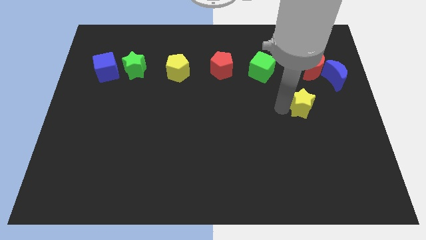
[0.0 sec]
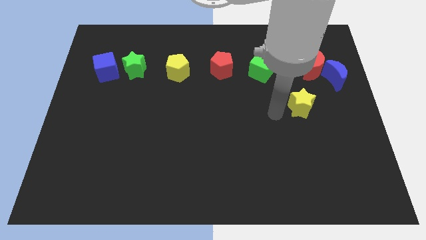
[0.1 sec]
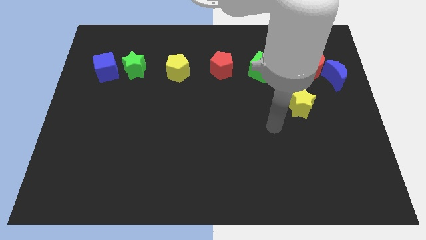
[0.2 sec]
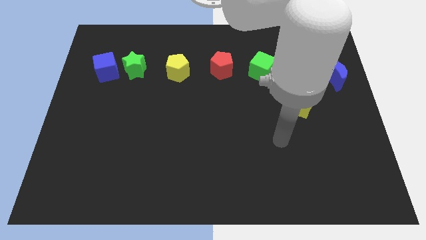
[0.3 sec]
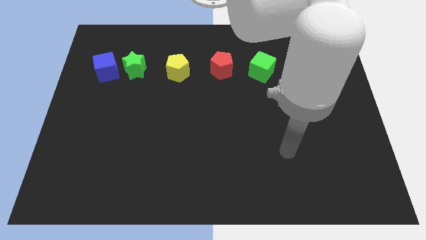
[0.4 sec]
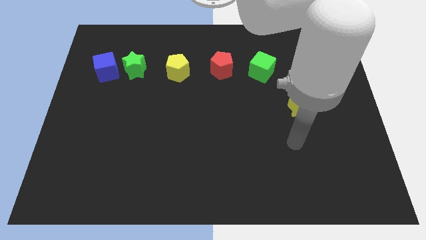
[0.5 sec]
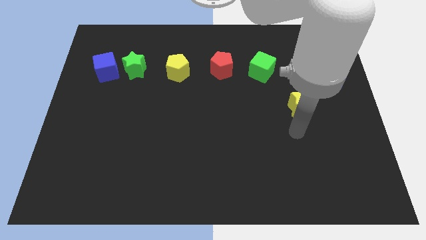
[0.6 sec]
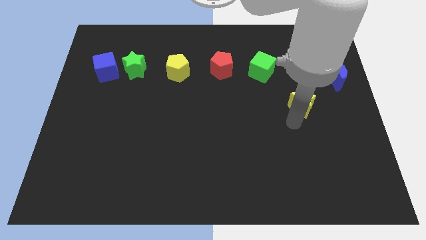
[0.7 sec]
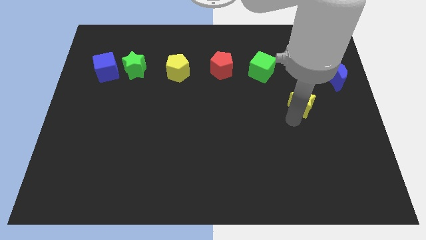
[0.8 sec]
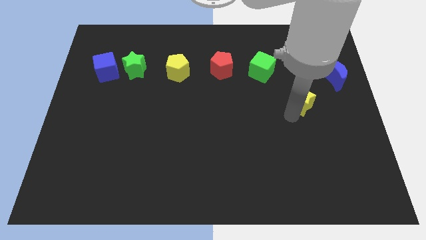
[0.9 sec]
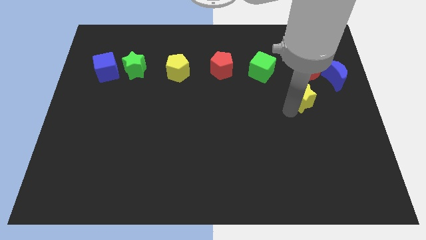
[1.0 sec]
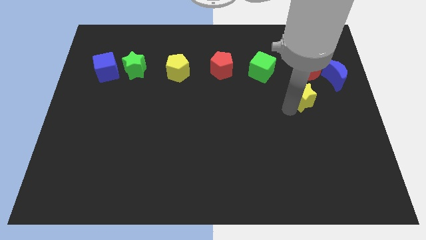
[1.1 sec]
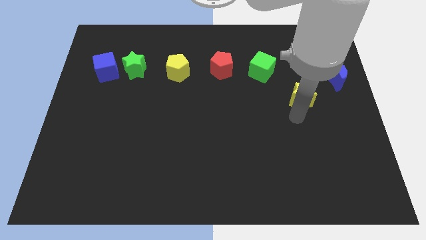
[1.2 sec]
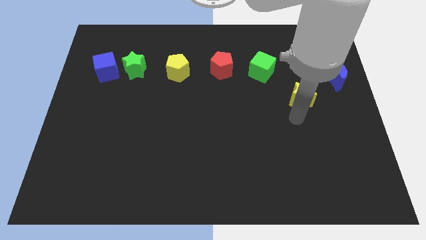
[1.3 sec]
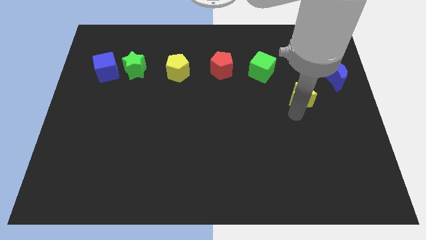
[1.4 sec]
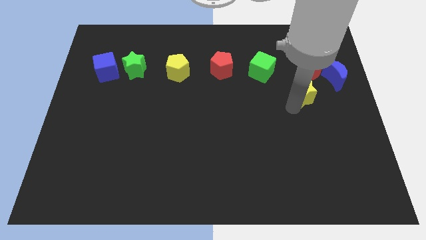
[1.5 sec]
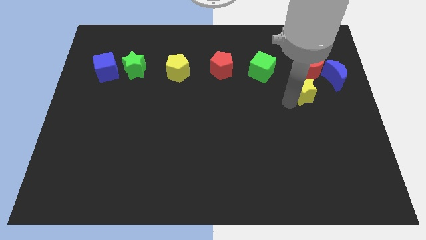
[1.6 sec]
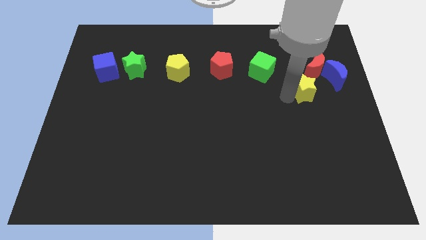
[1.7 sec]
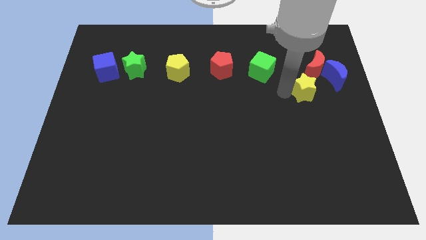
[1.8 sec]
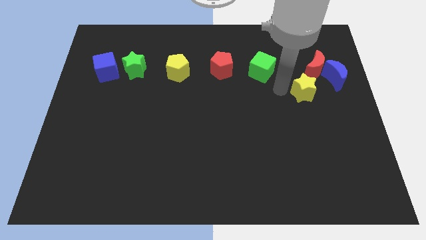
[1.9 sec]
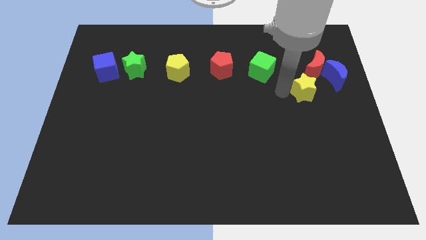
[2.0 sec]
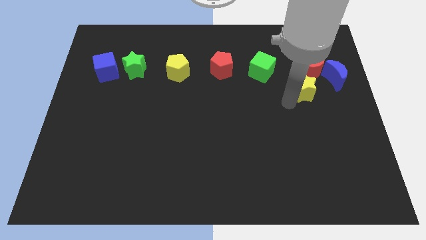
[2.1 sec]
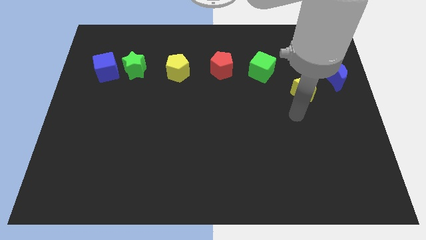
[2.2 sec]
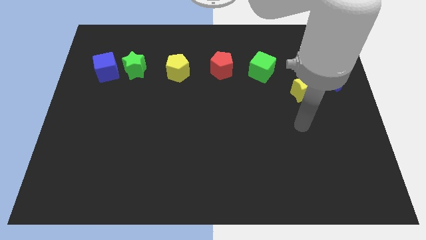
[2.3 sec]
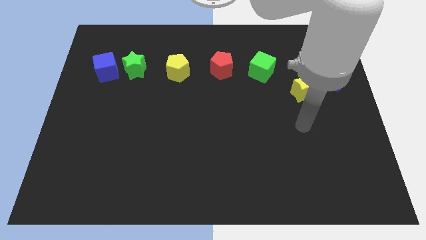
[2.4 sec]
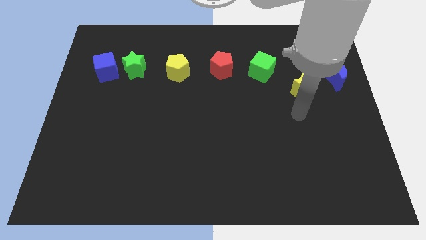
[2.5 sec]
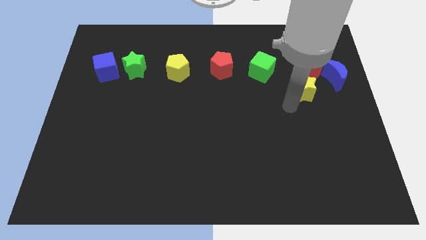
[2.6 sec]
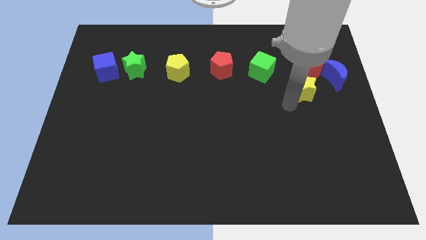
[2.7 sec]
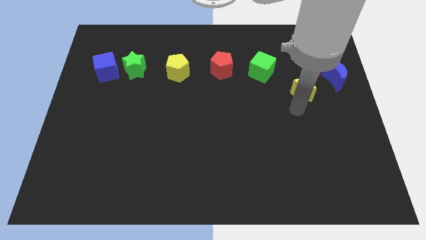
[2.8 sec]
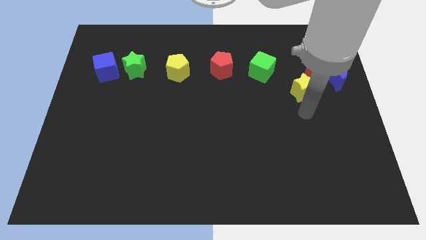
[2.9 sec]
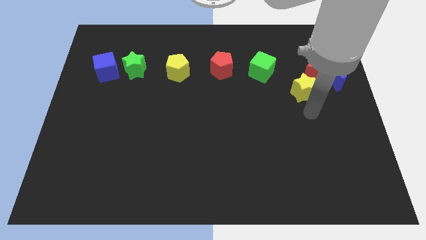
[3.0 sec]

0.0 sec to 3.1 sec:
move the yellow star into to the red moon

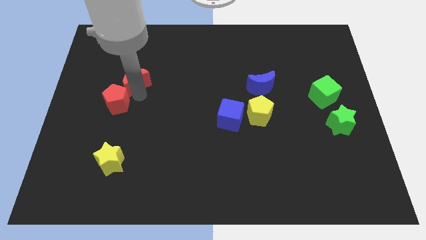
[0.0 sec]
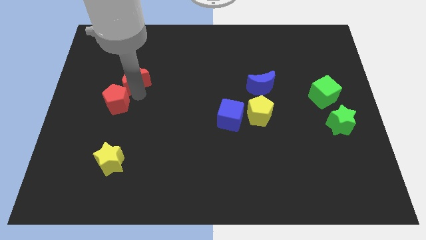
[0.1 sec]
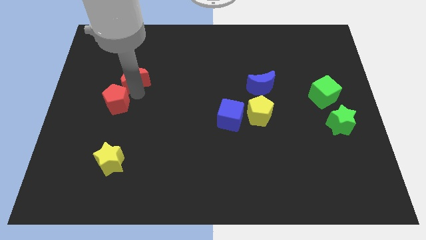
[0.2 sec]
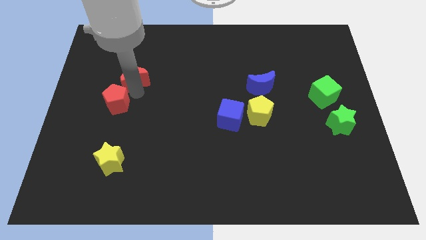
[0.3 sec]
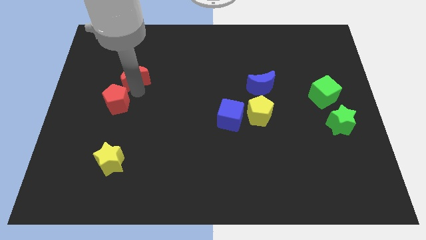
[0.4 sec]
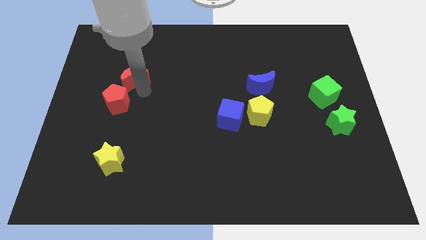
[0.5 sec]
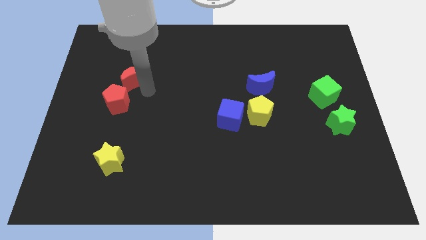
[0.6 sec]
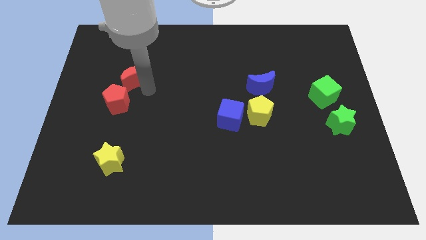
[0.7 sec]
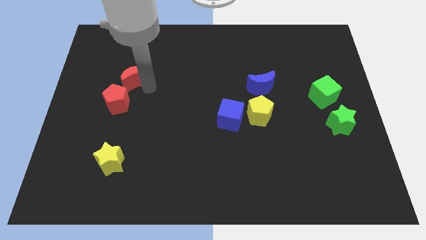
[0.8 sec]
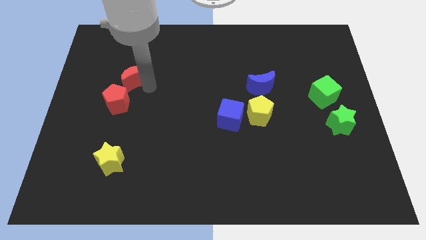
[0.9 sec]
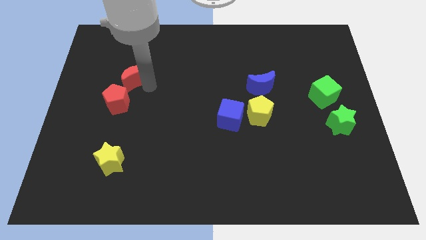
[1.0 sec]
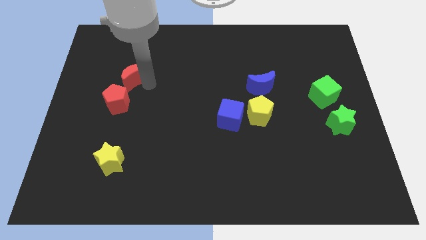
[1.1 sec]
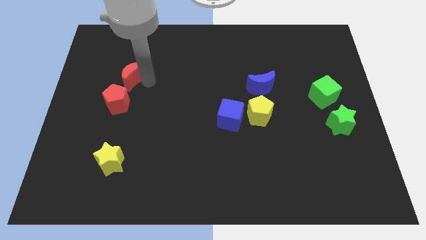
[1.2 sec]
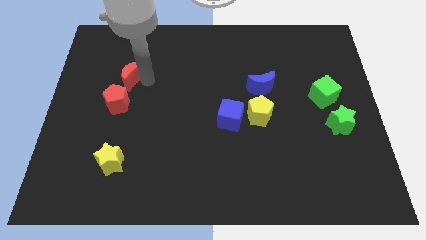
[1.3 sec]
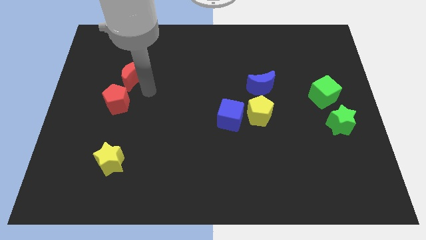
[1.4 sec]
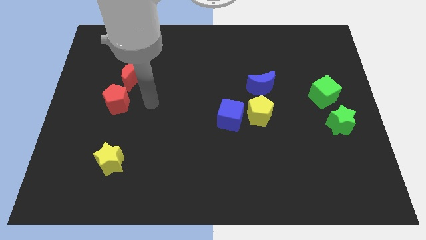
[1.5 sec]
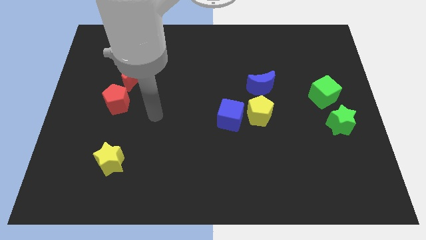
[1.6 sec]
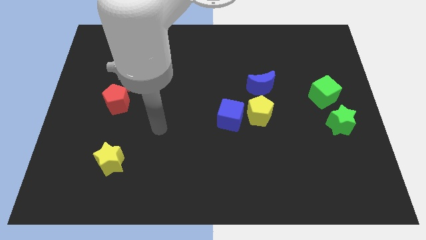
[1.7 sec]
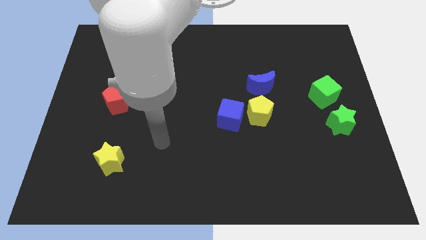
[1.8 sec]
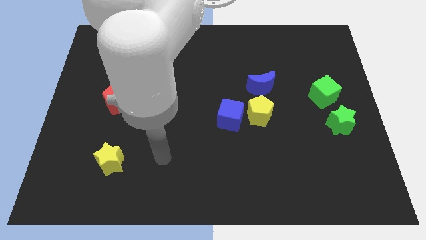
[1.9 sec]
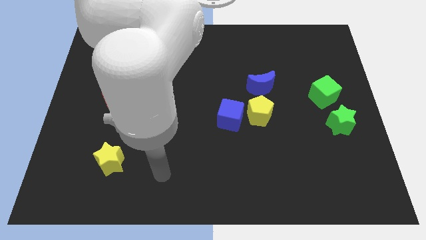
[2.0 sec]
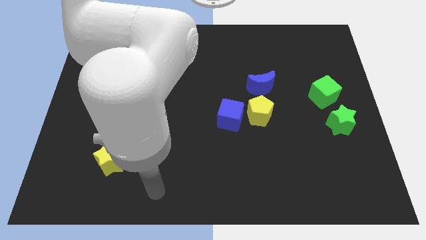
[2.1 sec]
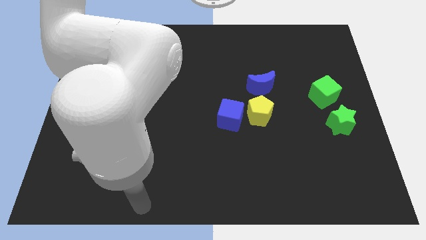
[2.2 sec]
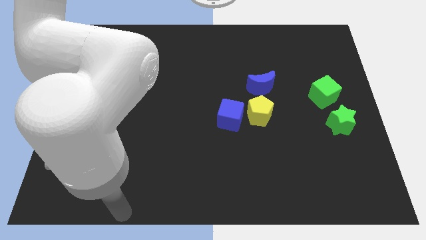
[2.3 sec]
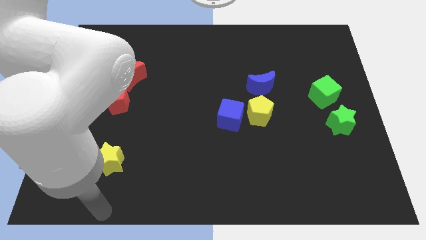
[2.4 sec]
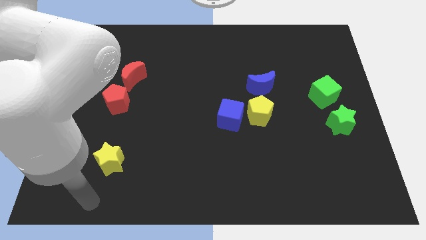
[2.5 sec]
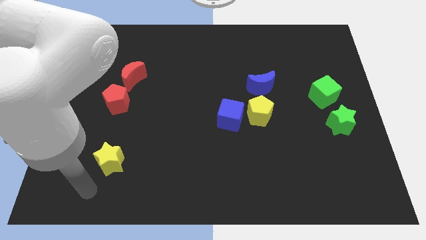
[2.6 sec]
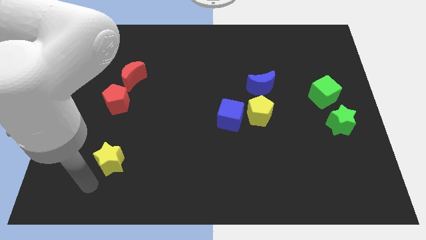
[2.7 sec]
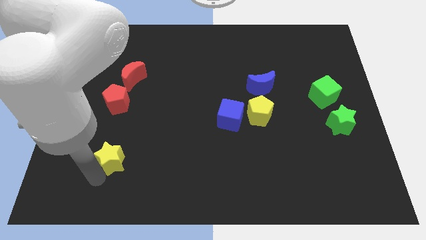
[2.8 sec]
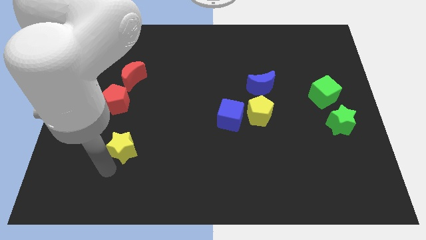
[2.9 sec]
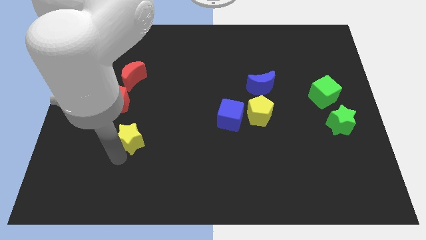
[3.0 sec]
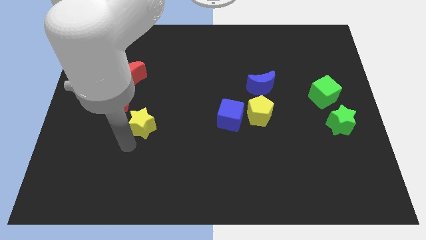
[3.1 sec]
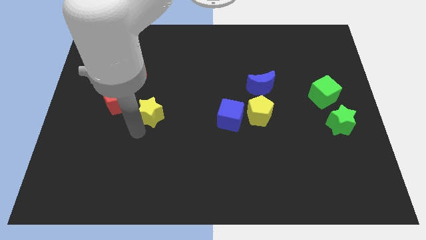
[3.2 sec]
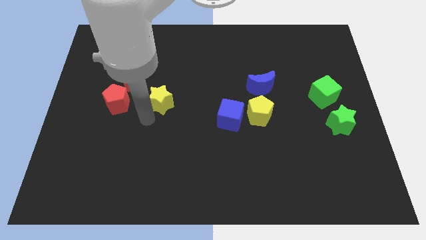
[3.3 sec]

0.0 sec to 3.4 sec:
place the yellow star right side of the red pentagon

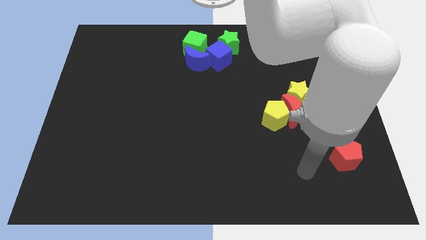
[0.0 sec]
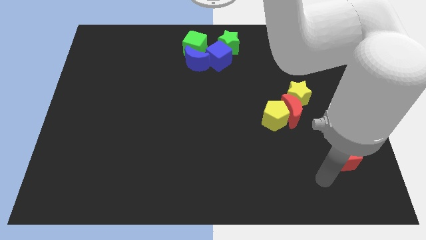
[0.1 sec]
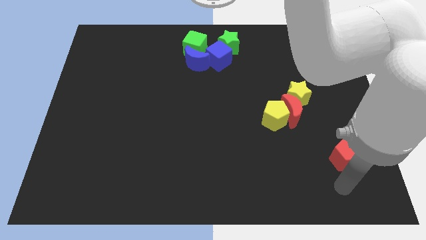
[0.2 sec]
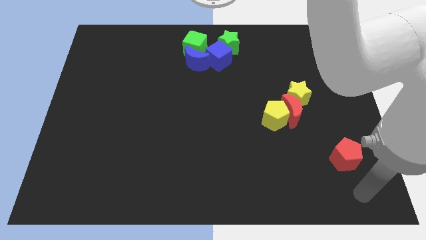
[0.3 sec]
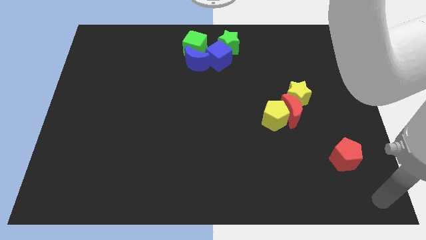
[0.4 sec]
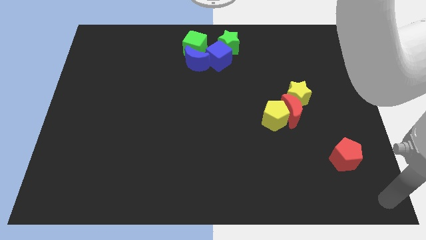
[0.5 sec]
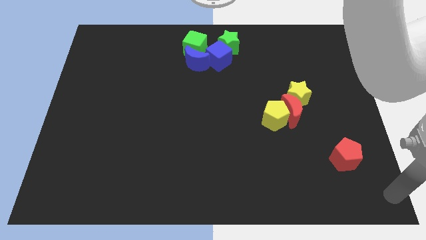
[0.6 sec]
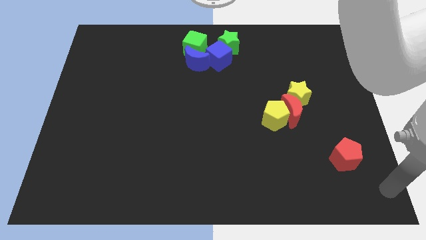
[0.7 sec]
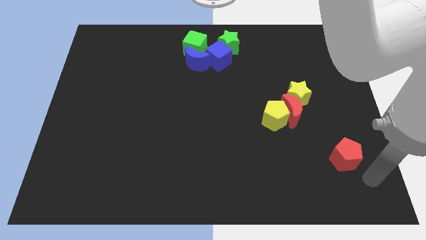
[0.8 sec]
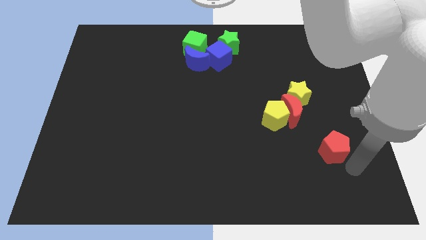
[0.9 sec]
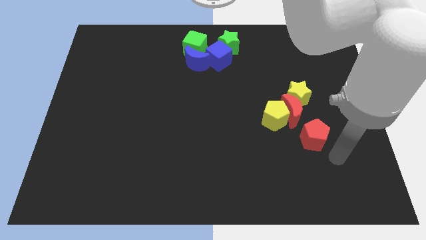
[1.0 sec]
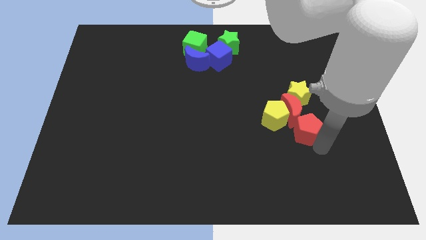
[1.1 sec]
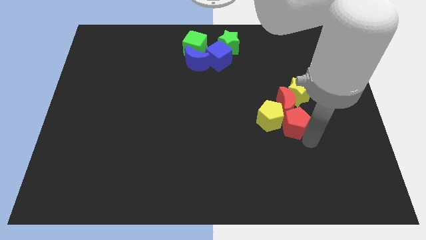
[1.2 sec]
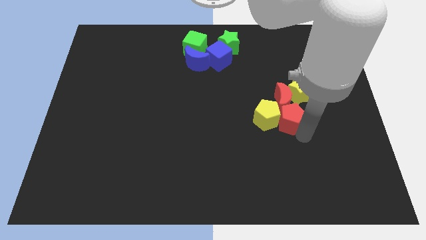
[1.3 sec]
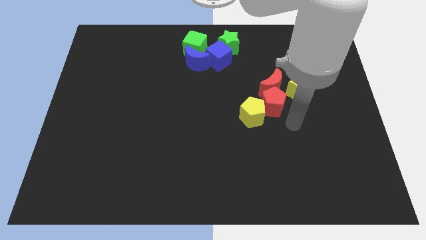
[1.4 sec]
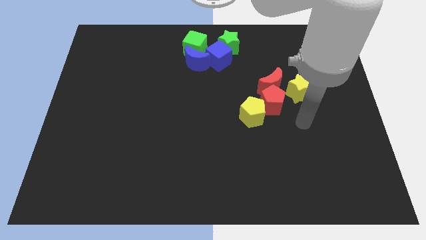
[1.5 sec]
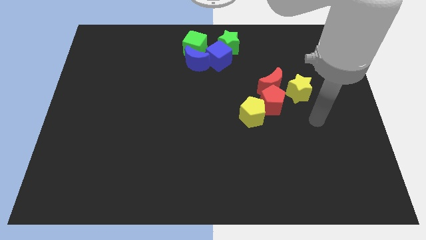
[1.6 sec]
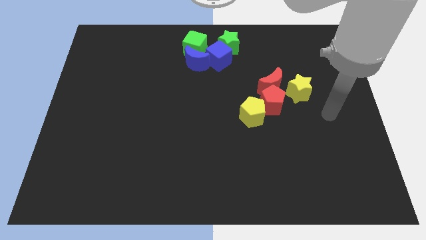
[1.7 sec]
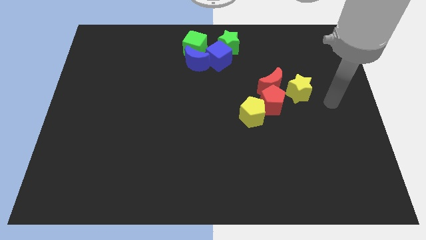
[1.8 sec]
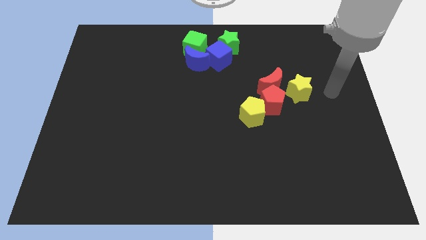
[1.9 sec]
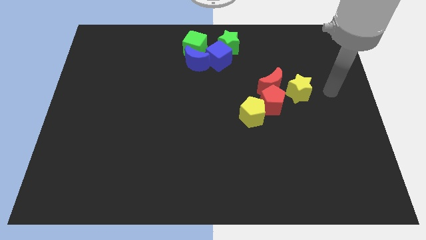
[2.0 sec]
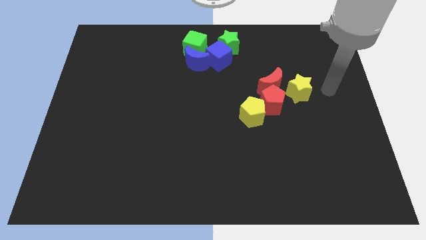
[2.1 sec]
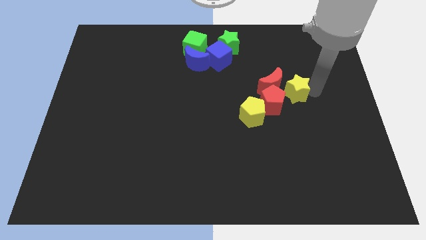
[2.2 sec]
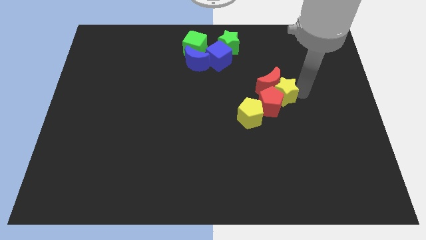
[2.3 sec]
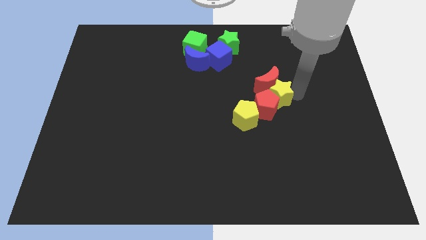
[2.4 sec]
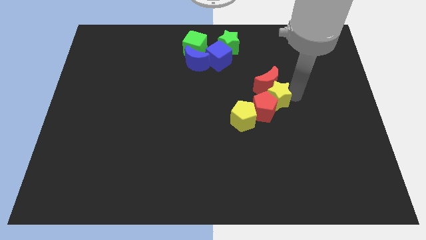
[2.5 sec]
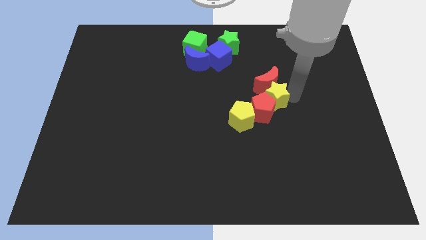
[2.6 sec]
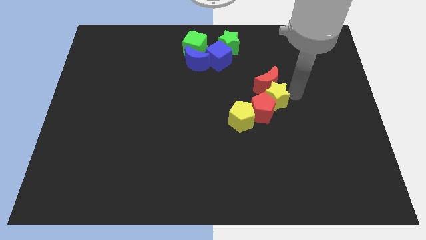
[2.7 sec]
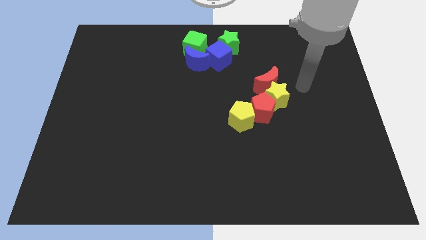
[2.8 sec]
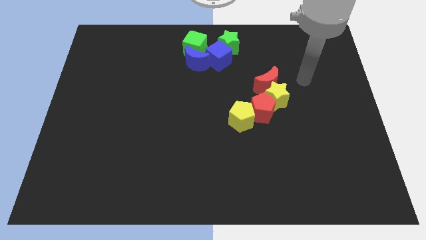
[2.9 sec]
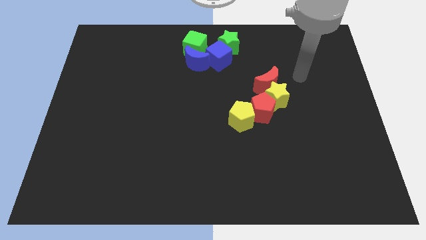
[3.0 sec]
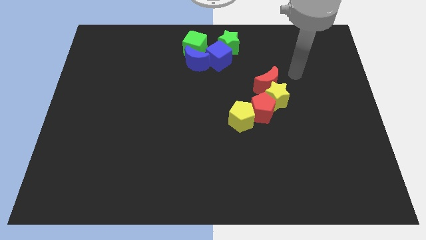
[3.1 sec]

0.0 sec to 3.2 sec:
drag the red pentagon and place it in between yellow star and yellow pentagon
